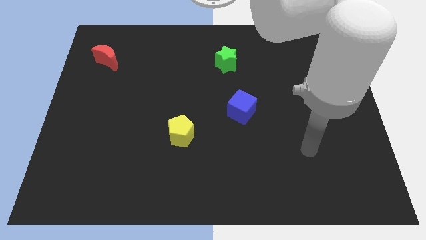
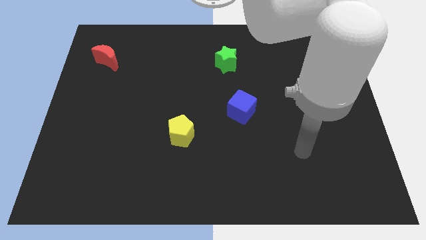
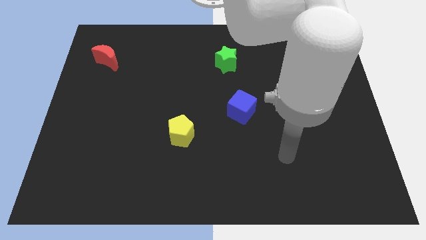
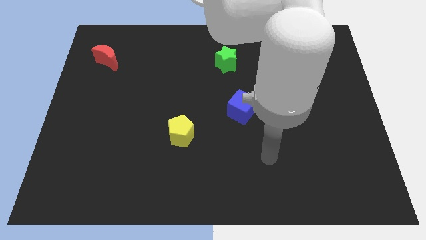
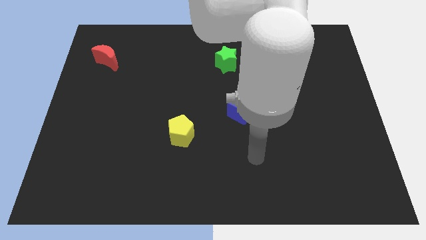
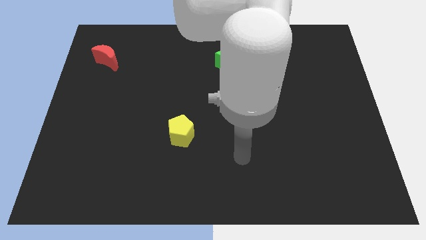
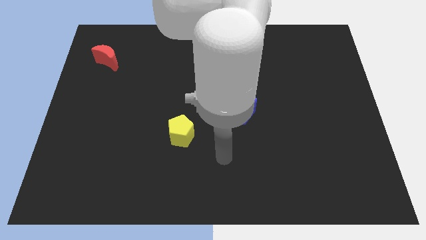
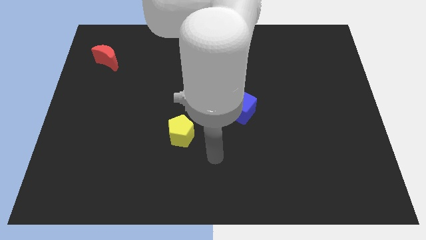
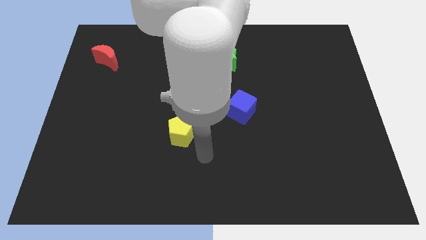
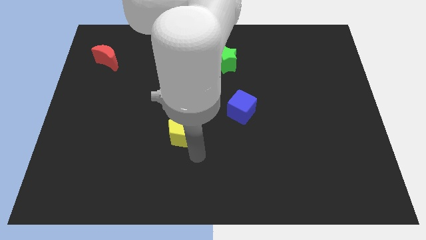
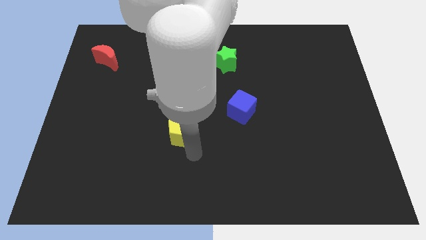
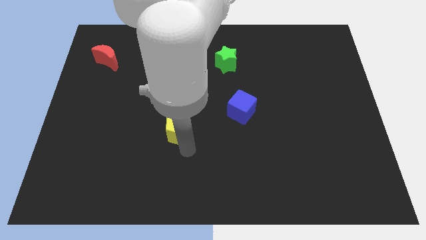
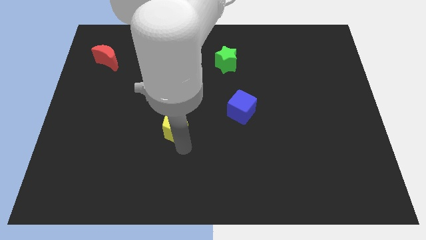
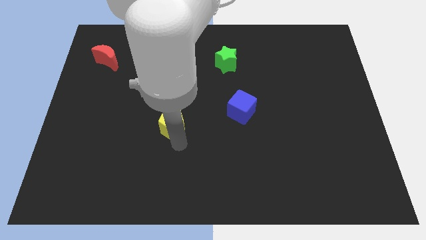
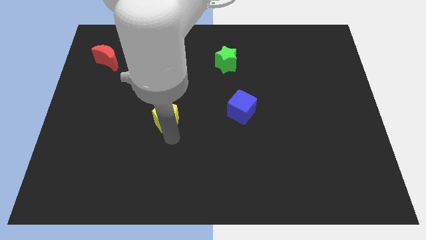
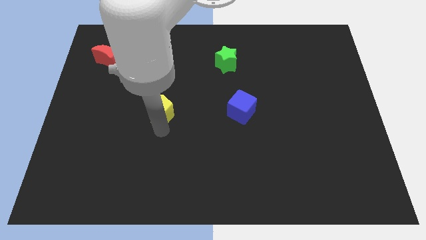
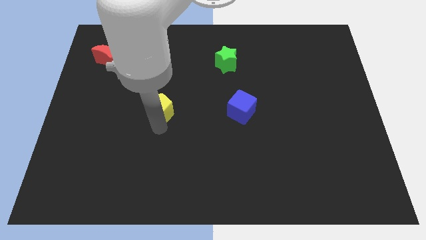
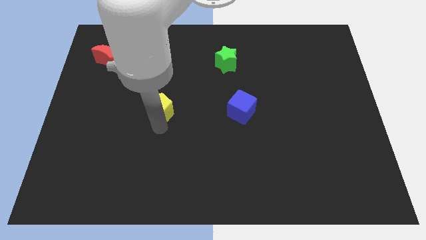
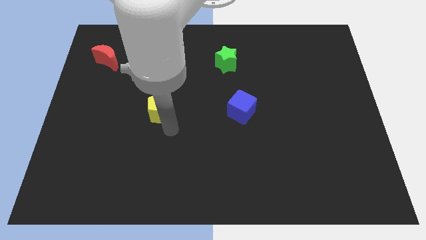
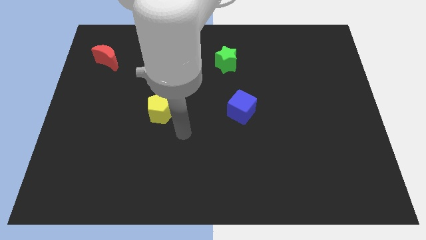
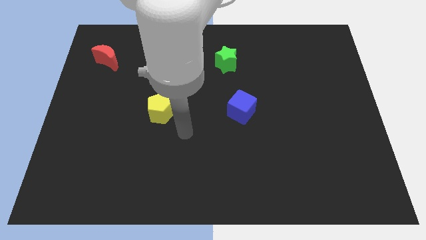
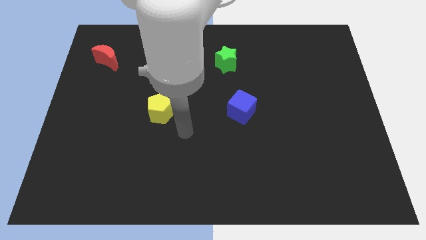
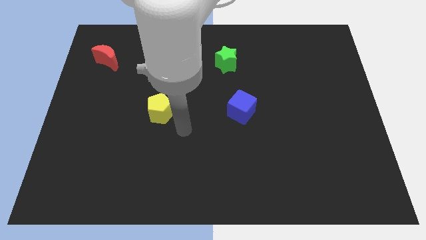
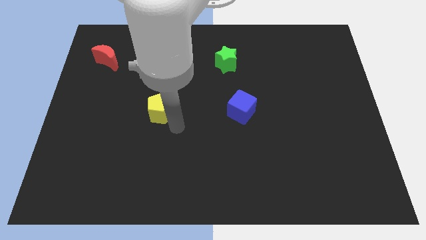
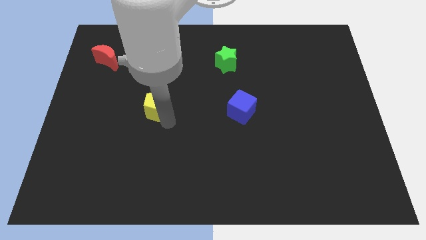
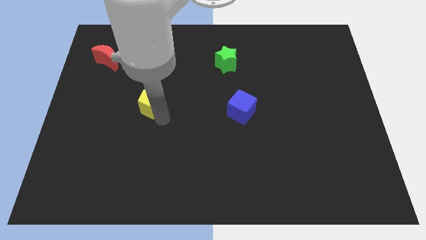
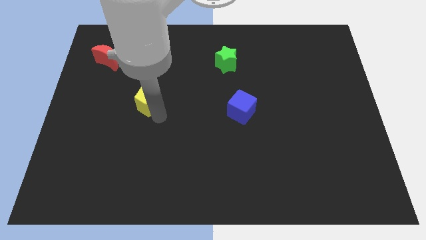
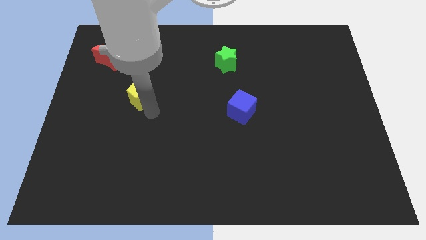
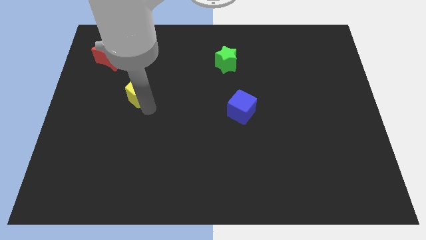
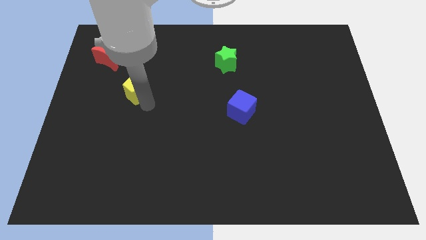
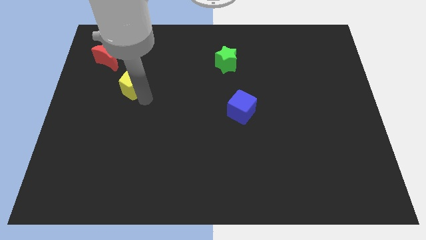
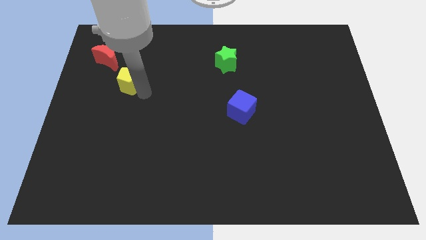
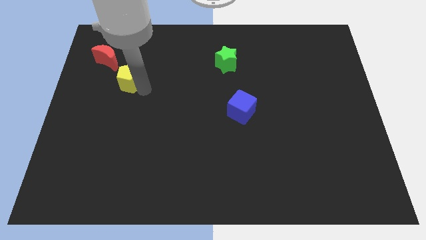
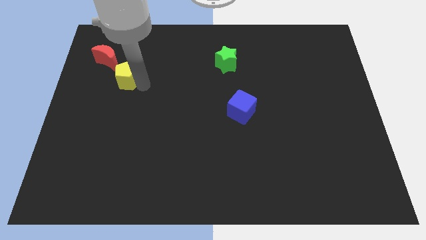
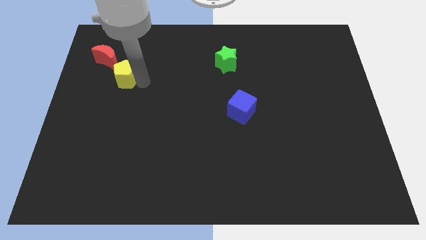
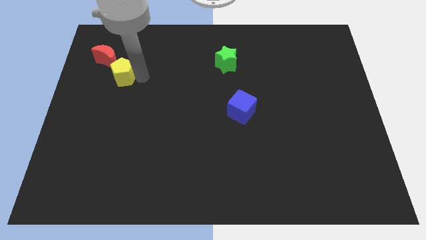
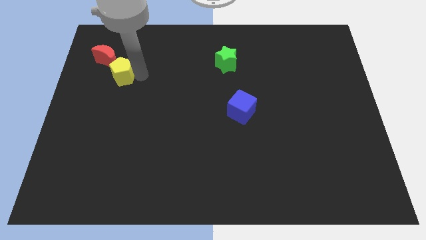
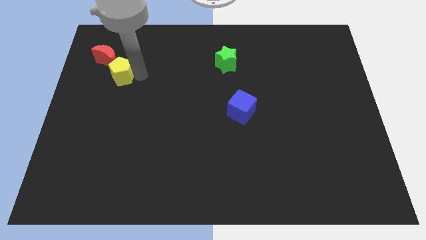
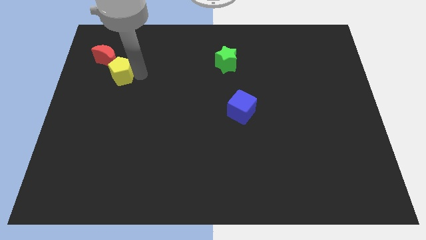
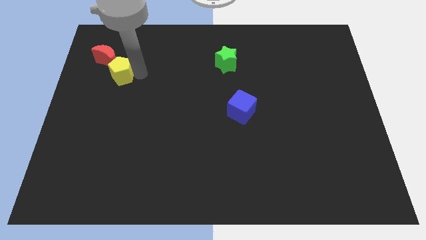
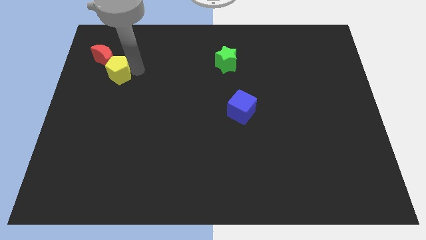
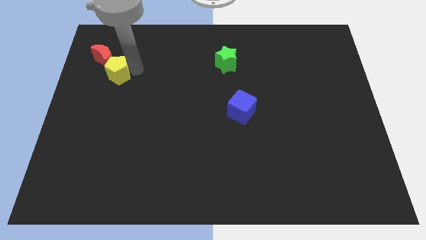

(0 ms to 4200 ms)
move the yellow block close to the red block

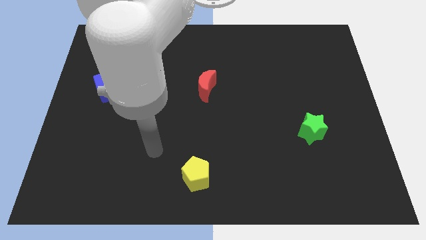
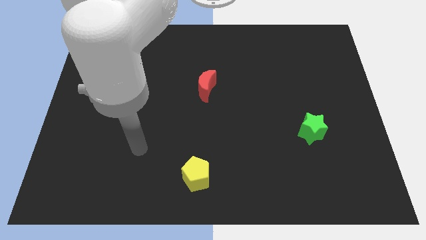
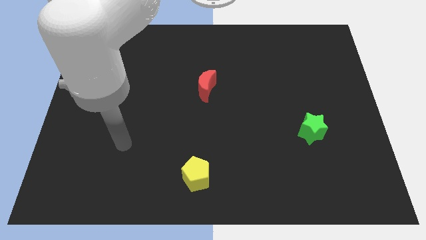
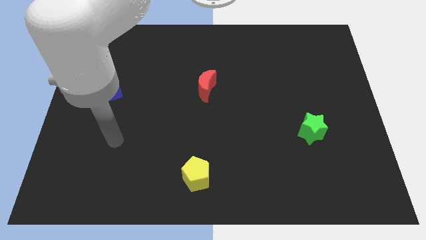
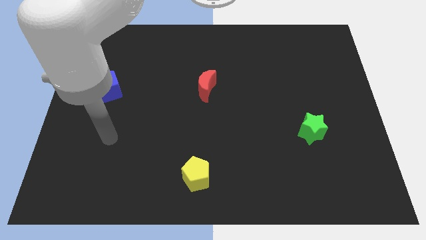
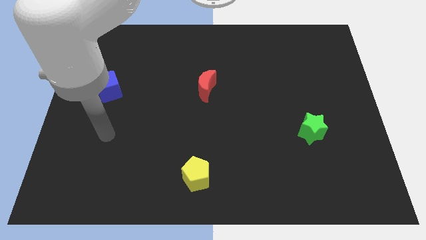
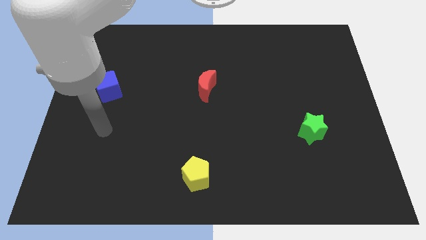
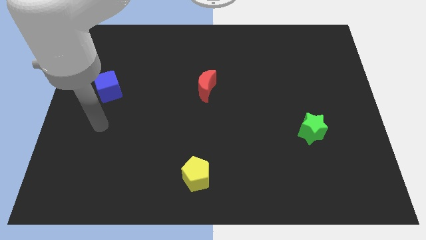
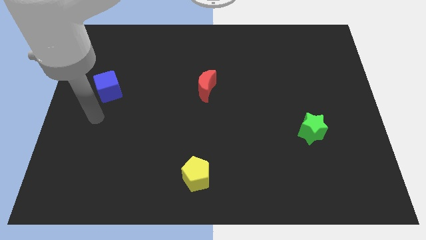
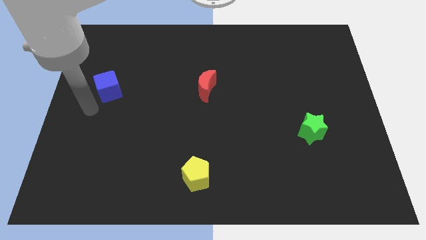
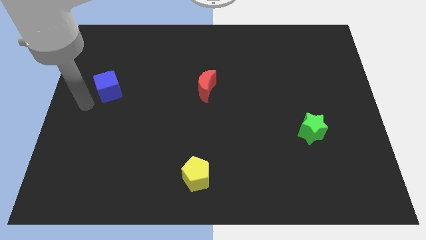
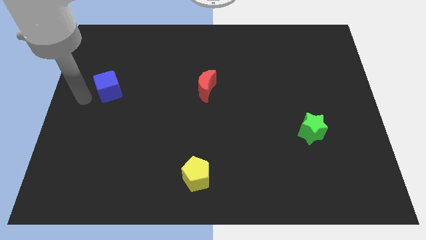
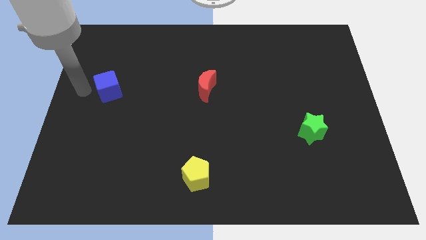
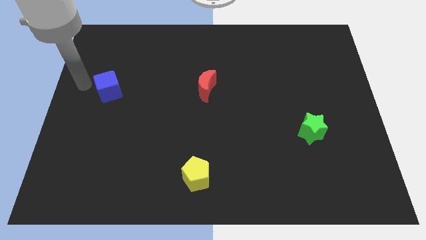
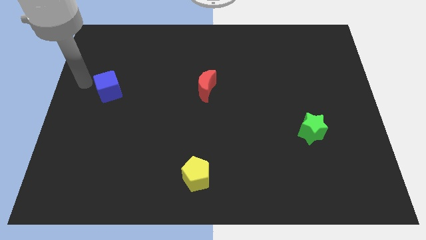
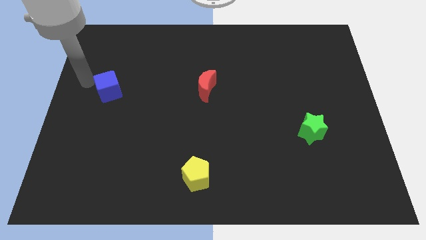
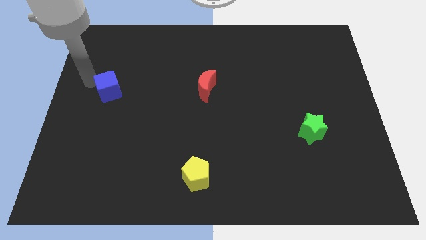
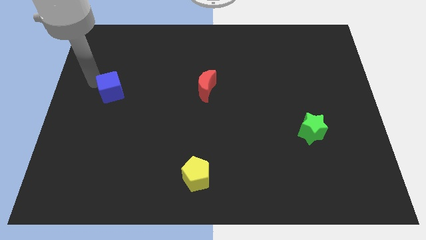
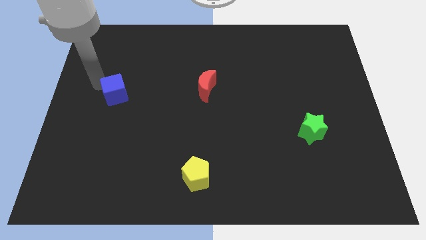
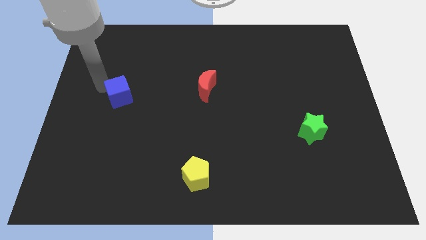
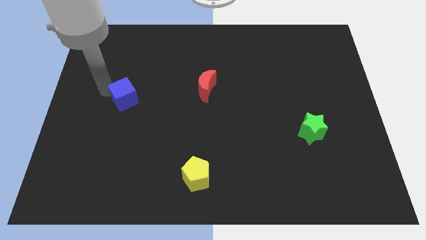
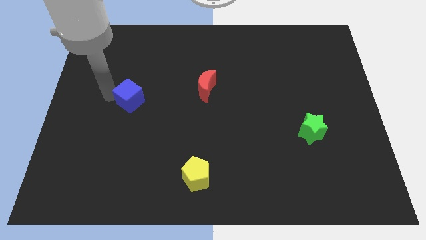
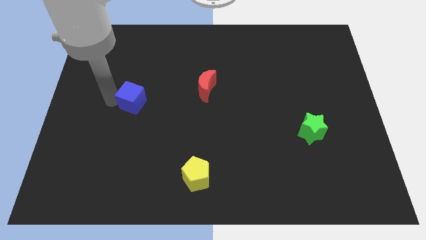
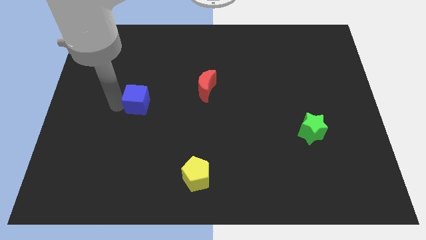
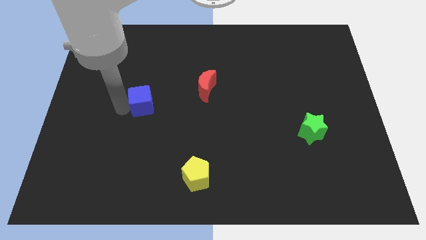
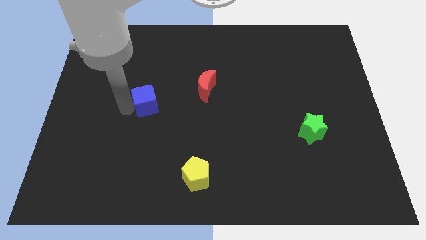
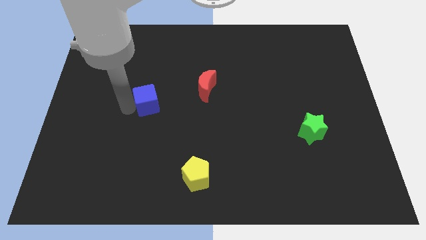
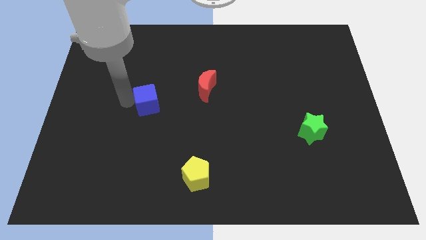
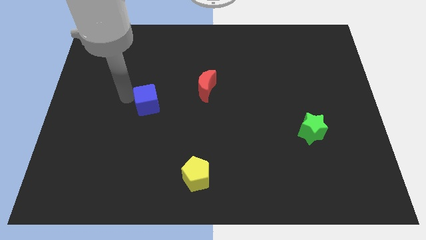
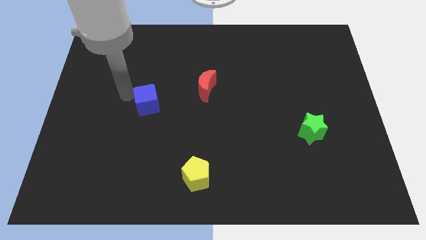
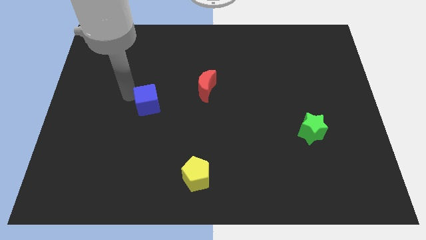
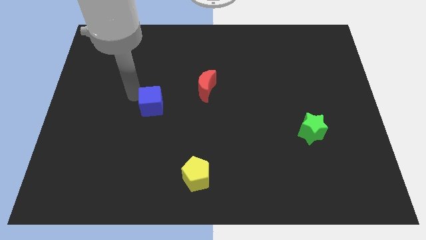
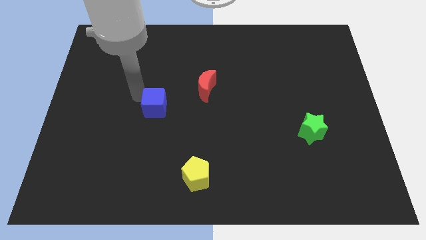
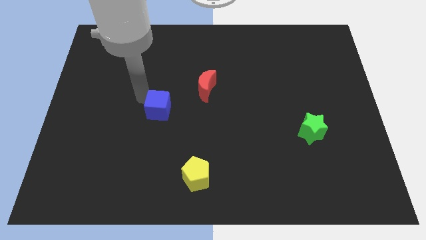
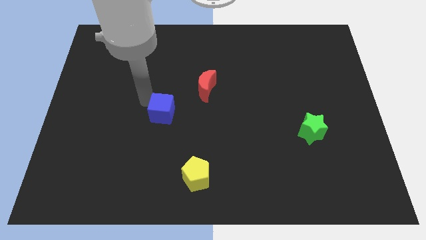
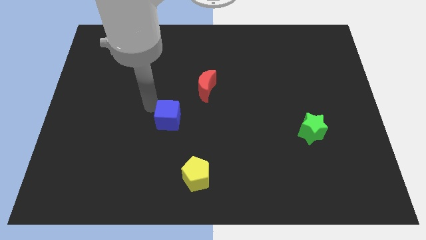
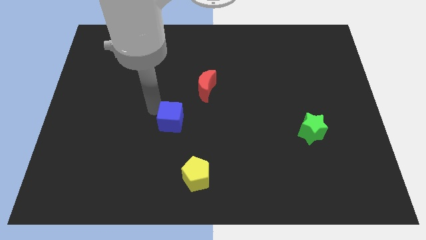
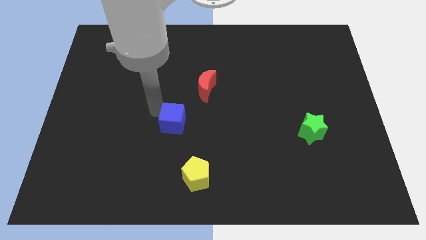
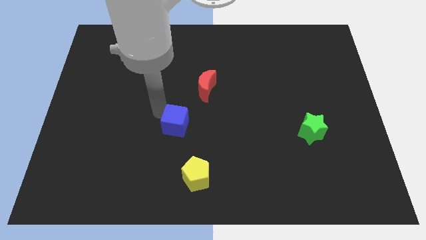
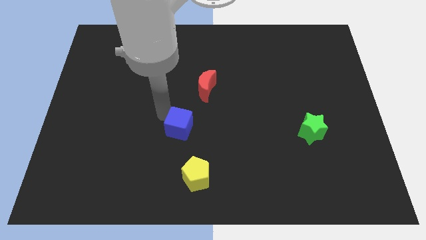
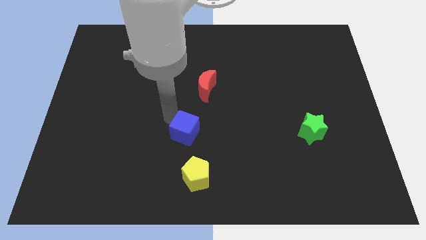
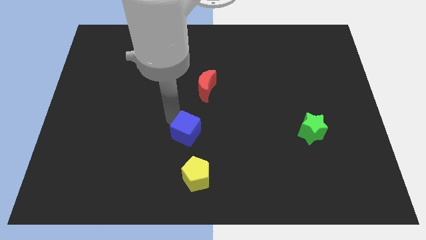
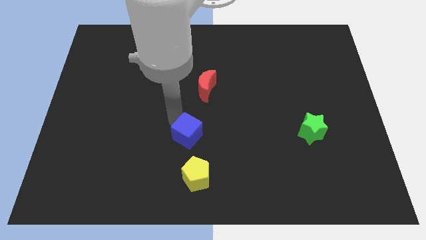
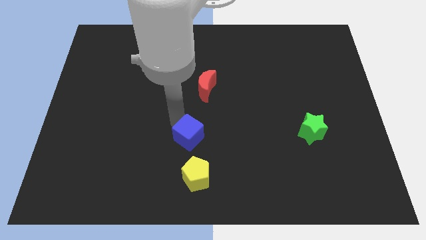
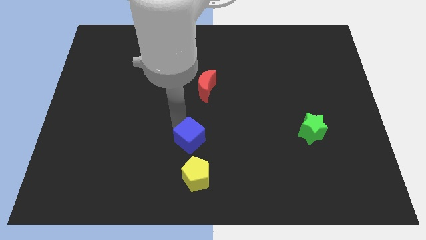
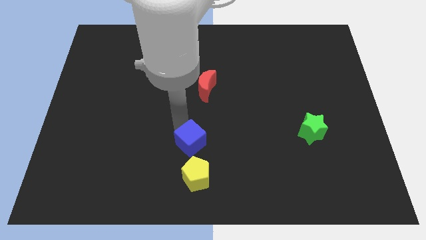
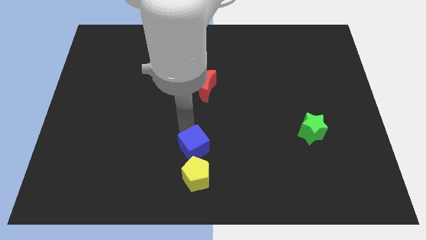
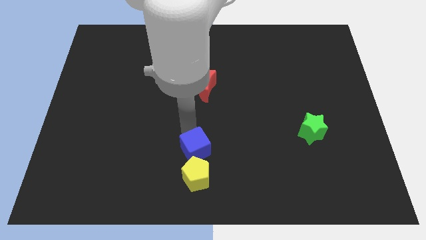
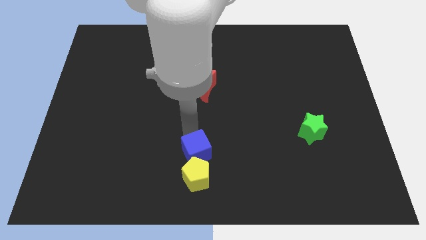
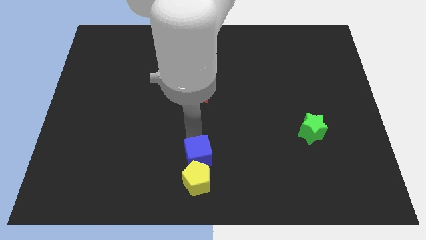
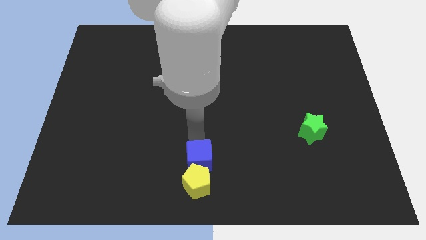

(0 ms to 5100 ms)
push the blue block to the yellow block
